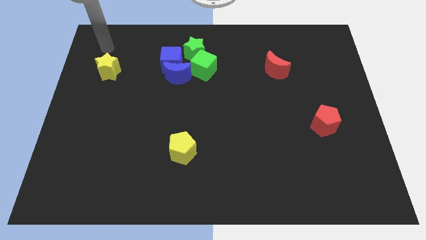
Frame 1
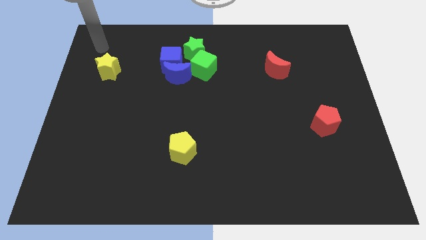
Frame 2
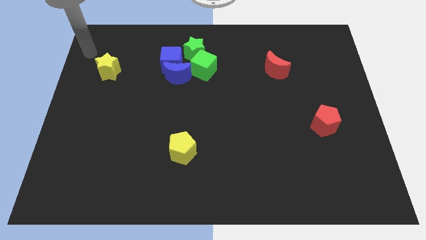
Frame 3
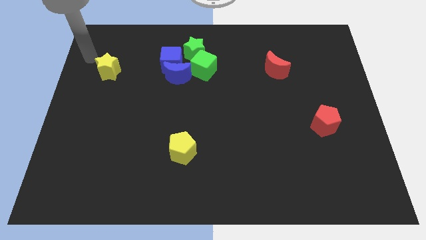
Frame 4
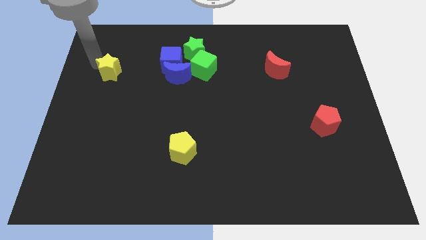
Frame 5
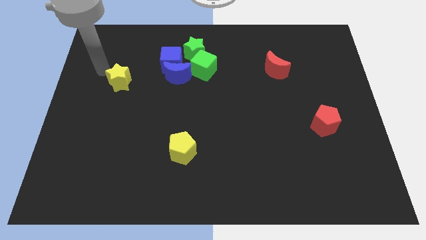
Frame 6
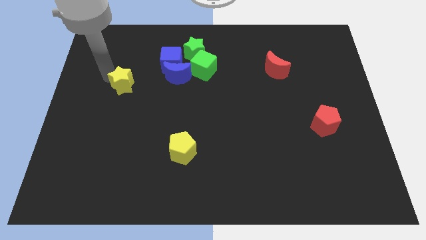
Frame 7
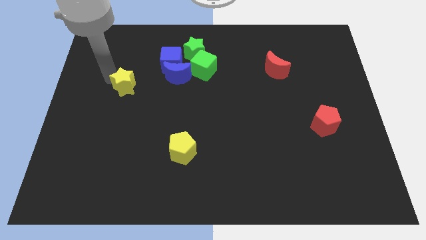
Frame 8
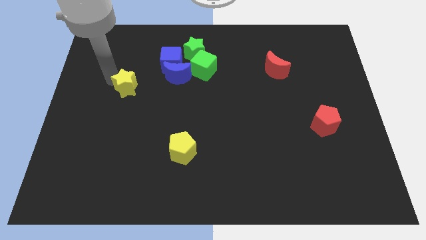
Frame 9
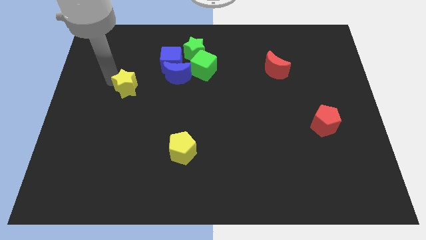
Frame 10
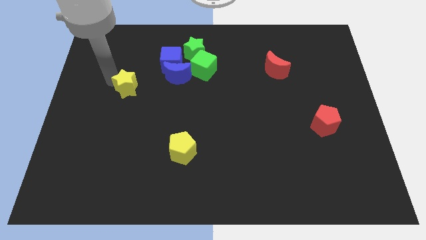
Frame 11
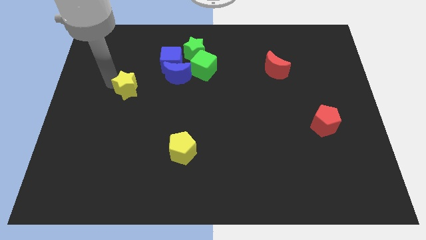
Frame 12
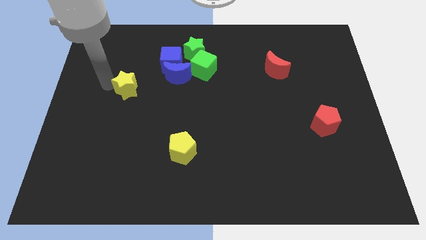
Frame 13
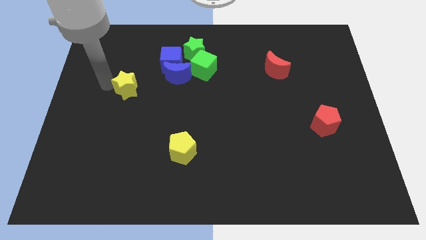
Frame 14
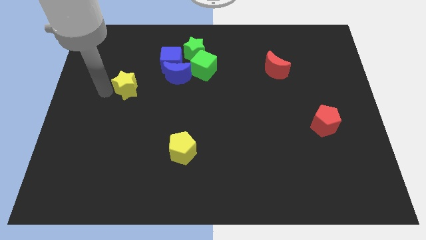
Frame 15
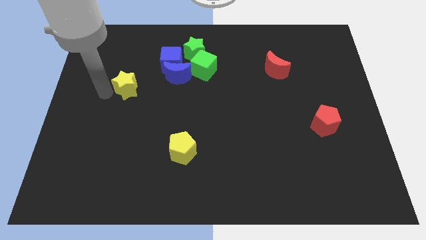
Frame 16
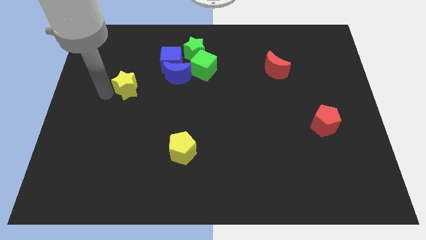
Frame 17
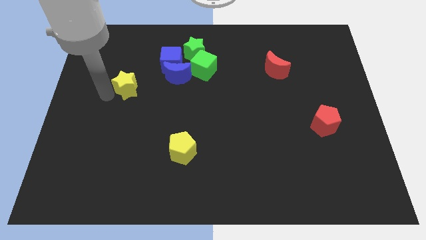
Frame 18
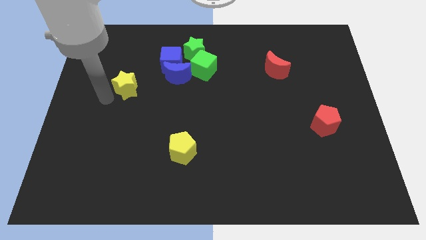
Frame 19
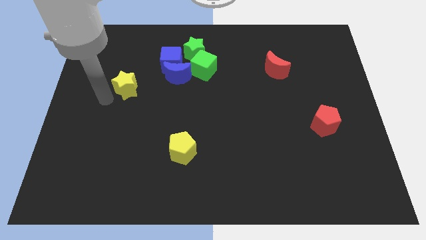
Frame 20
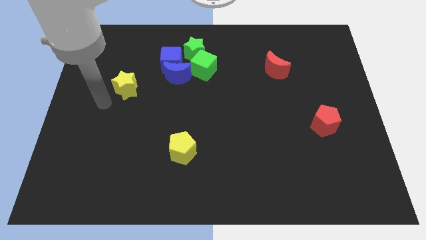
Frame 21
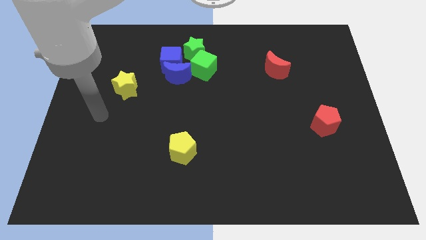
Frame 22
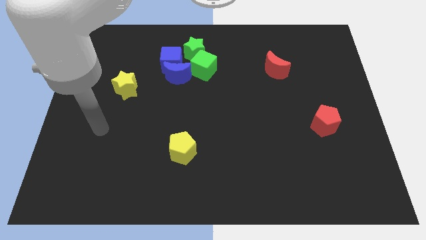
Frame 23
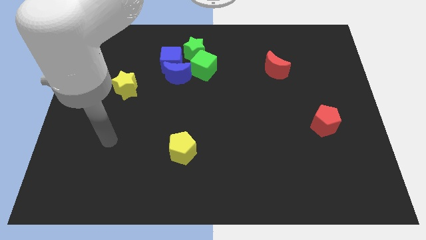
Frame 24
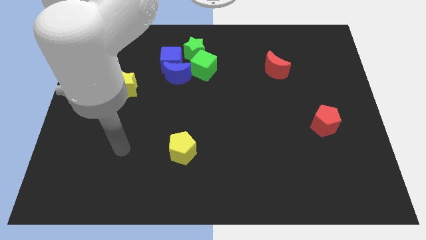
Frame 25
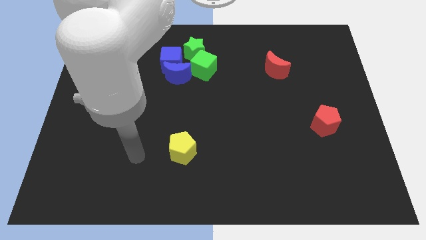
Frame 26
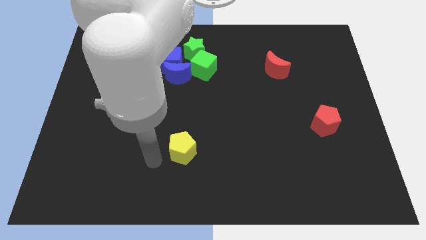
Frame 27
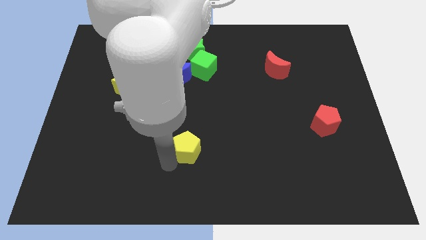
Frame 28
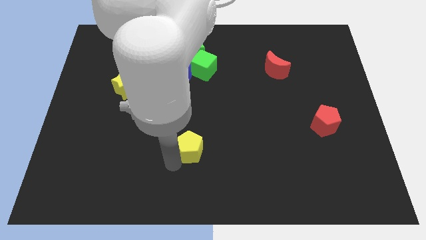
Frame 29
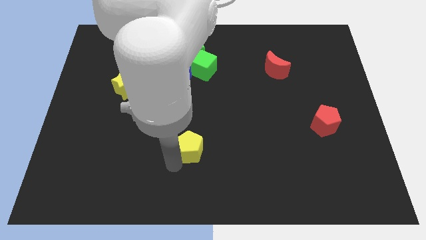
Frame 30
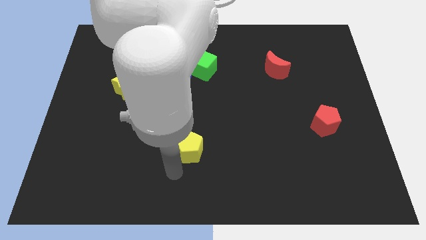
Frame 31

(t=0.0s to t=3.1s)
move the yellow star downwards

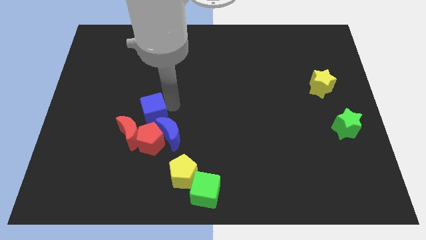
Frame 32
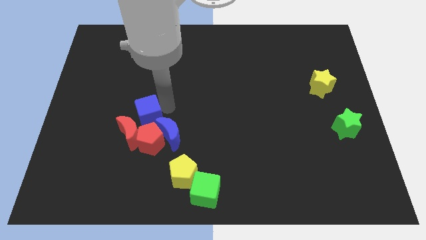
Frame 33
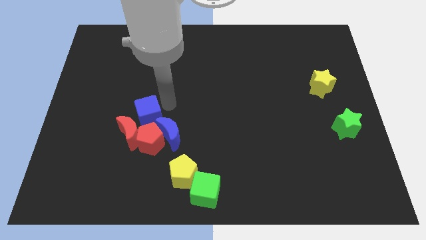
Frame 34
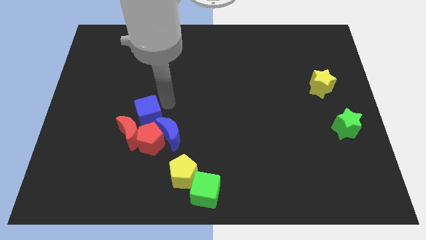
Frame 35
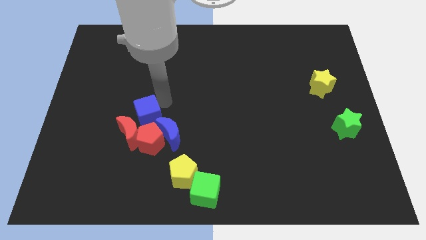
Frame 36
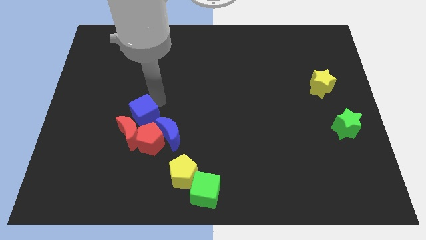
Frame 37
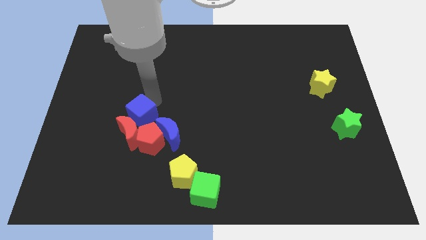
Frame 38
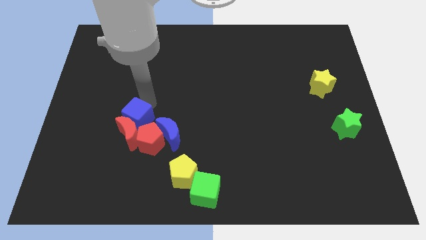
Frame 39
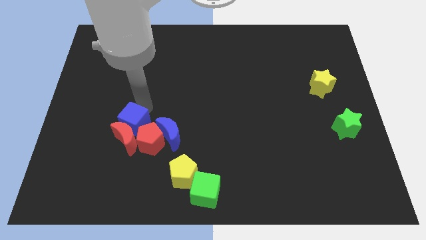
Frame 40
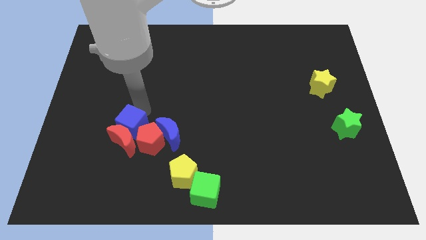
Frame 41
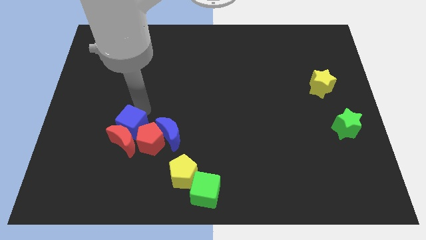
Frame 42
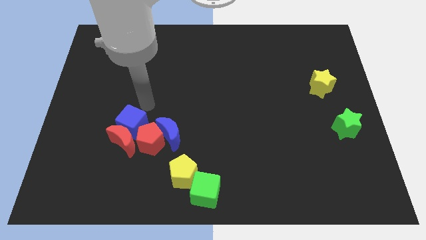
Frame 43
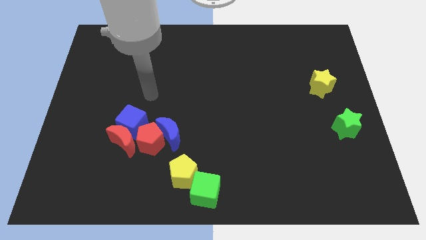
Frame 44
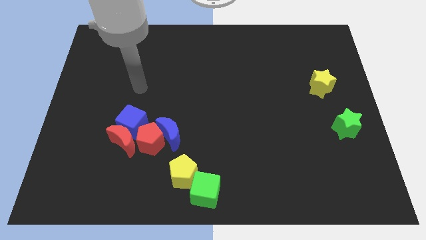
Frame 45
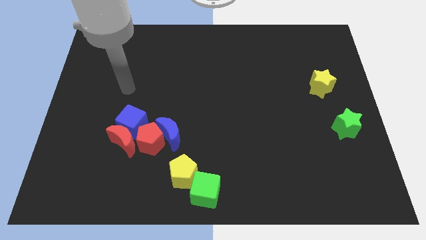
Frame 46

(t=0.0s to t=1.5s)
push the blue cube into red crescent

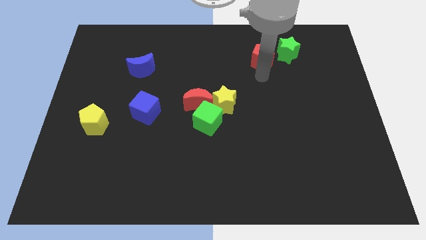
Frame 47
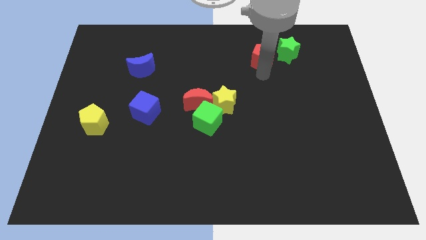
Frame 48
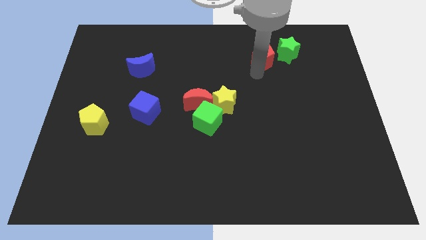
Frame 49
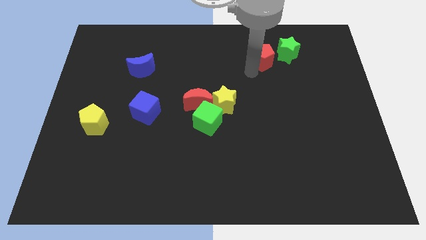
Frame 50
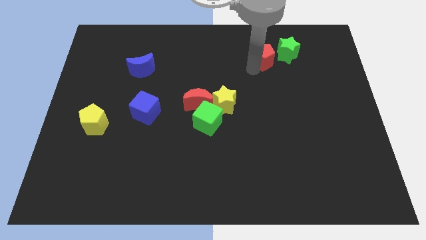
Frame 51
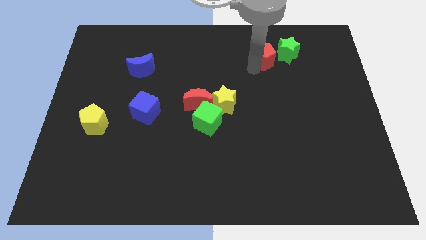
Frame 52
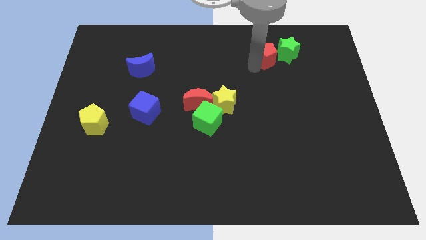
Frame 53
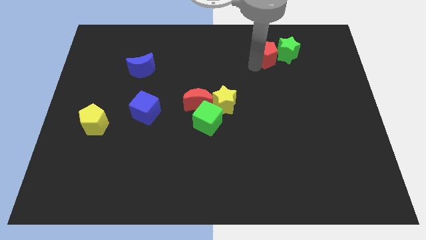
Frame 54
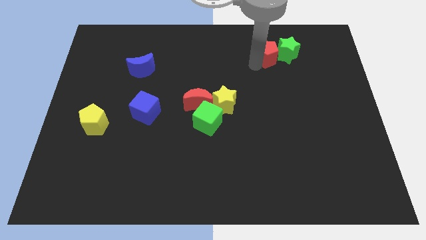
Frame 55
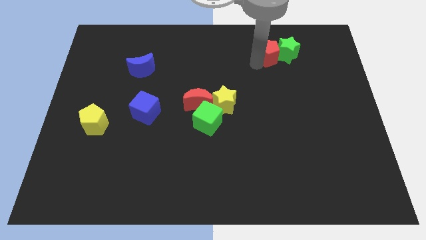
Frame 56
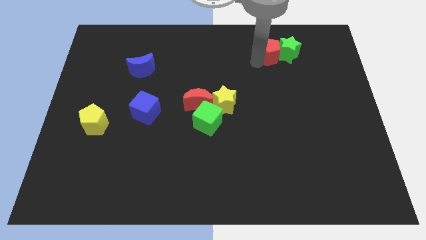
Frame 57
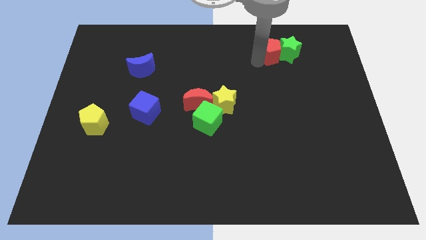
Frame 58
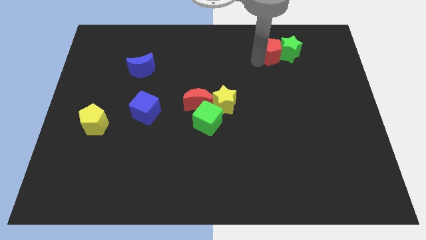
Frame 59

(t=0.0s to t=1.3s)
push the red pentagon into the green star

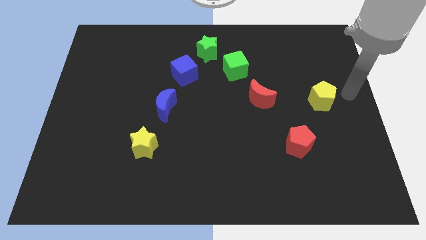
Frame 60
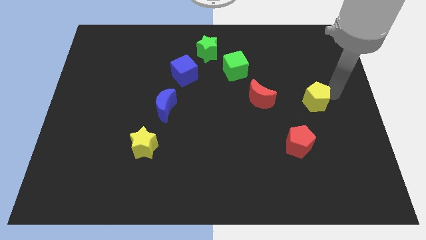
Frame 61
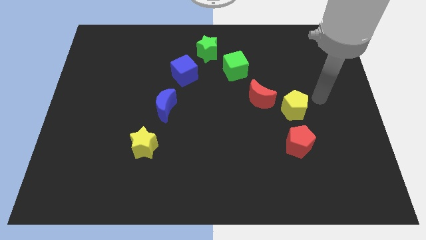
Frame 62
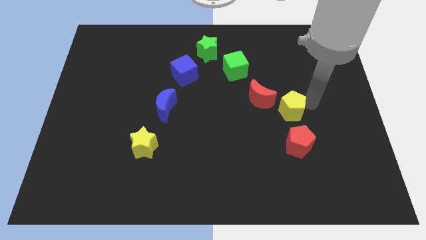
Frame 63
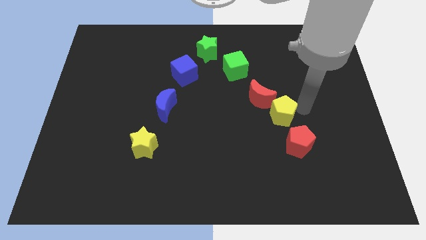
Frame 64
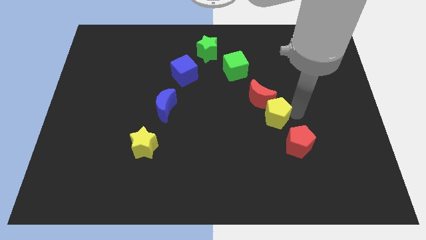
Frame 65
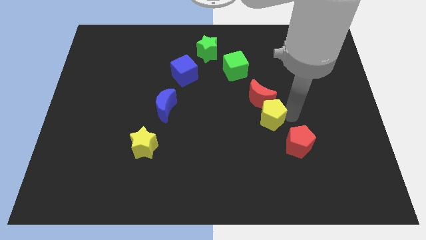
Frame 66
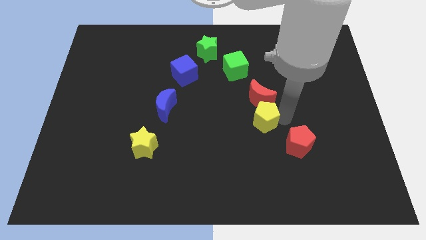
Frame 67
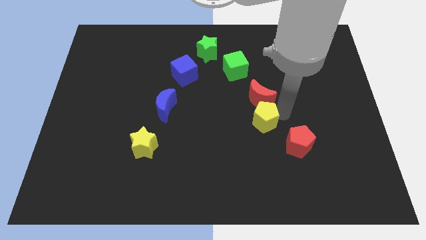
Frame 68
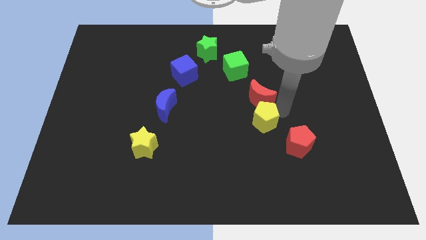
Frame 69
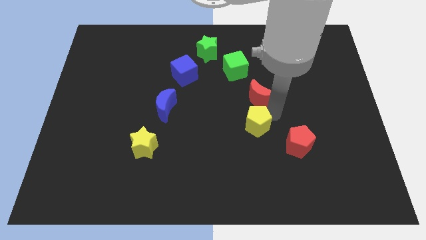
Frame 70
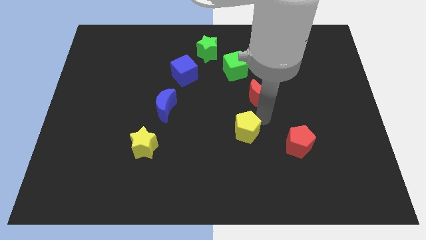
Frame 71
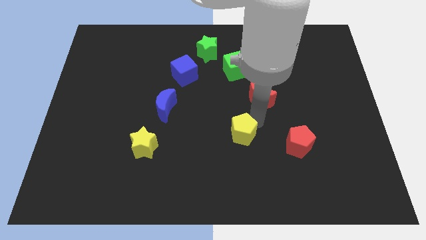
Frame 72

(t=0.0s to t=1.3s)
move the yellow pentagon towards the bottom center of the board

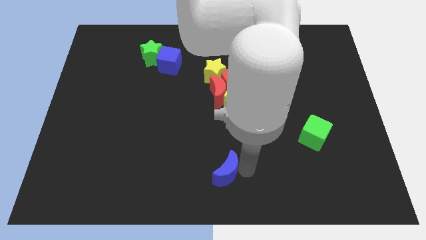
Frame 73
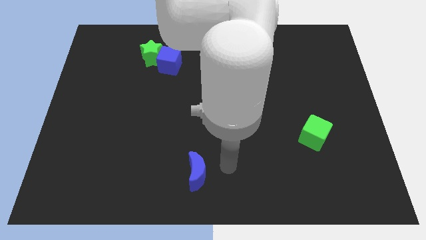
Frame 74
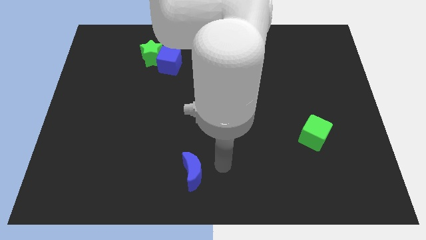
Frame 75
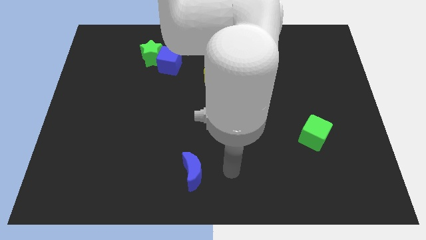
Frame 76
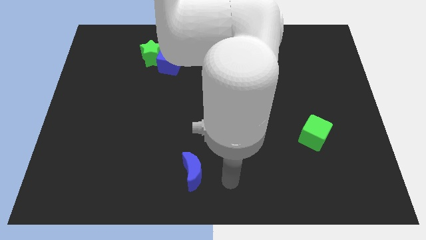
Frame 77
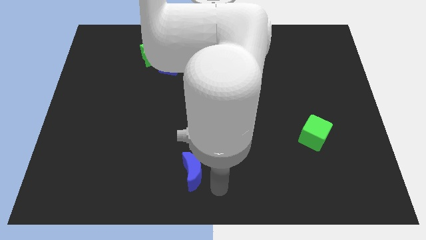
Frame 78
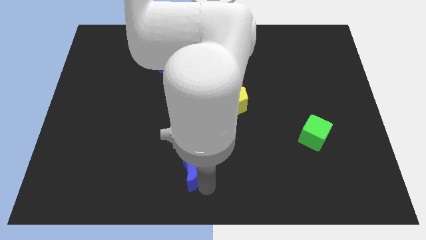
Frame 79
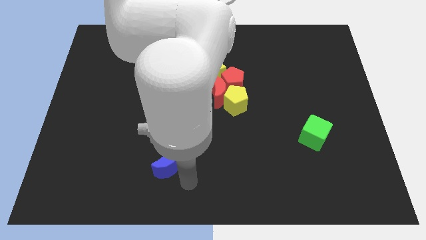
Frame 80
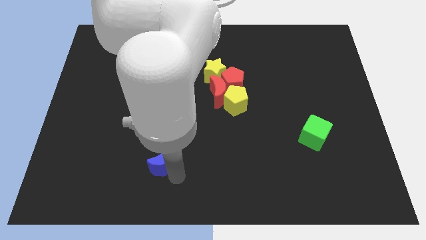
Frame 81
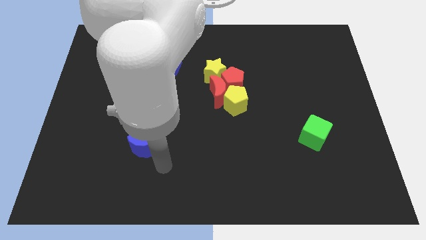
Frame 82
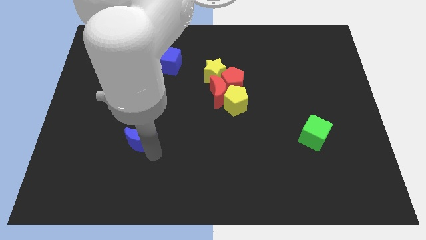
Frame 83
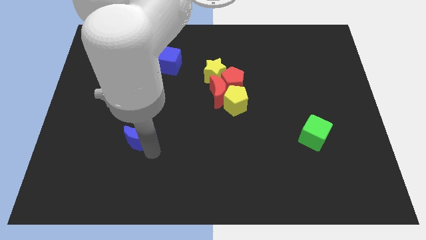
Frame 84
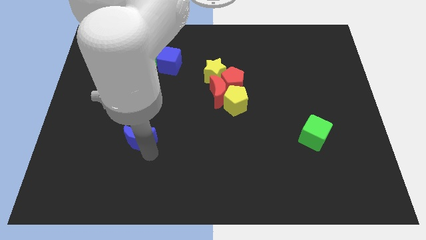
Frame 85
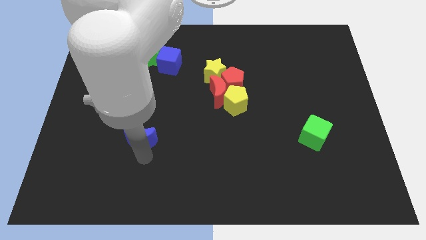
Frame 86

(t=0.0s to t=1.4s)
push the blue moon slightly towards the center

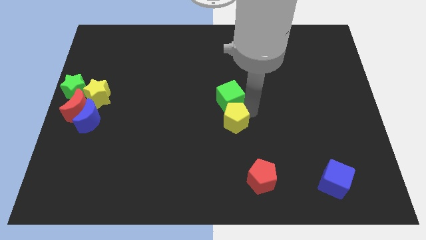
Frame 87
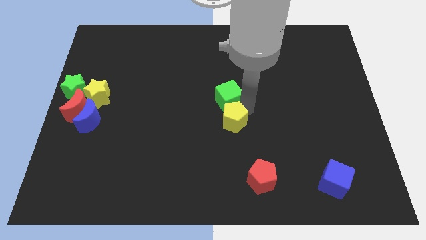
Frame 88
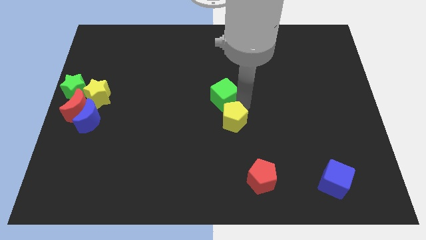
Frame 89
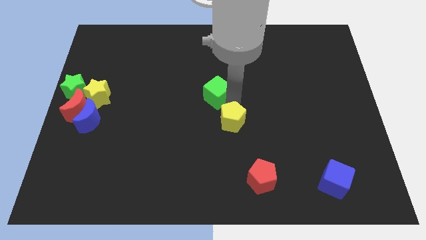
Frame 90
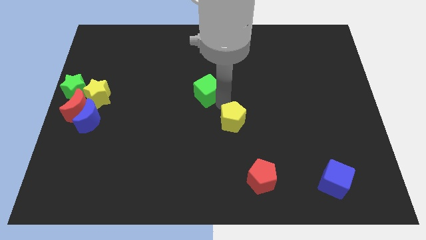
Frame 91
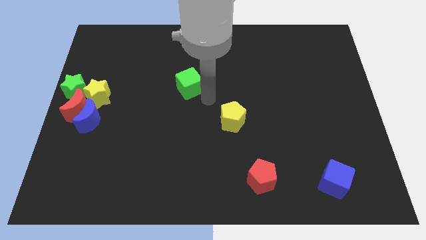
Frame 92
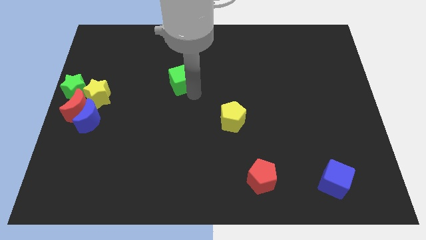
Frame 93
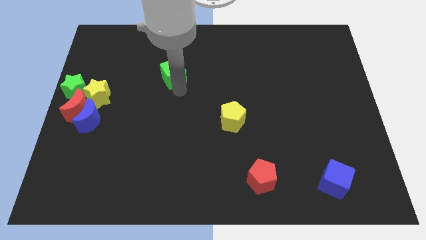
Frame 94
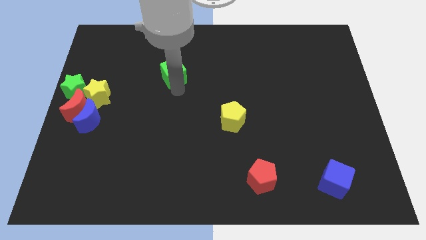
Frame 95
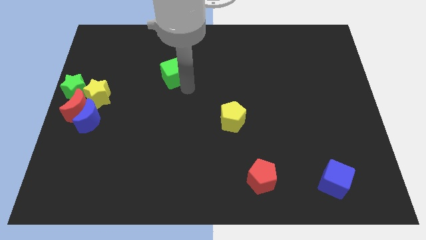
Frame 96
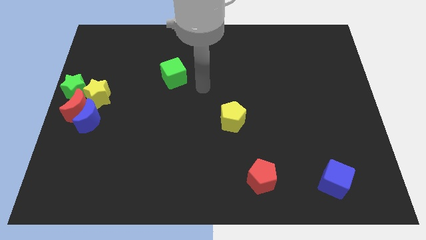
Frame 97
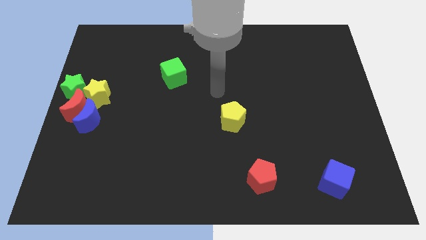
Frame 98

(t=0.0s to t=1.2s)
separate the green cube from the yellow pentagon
